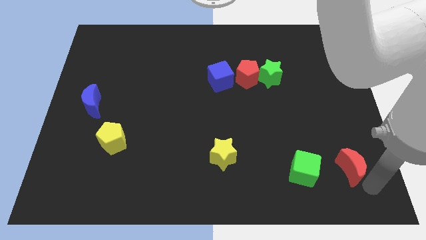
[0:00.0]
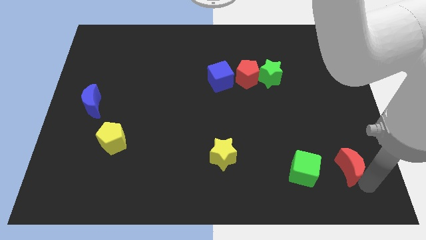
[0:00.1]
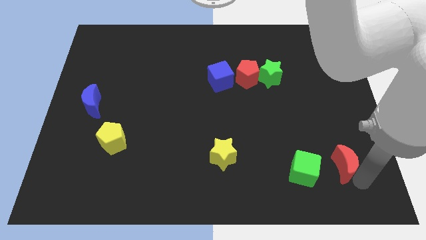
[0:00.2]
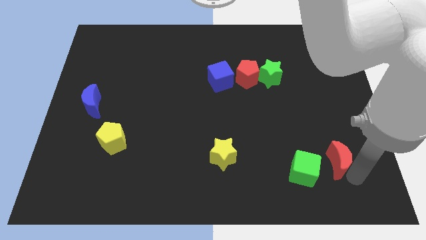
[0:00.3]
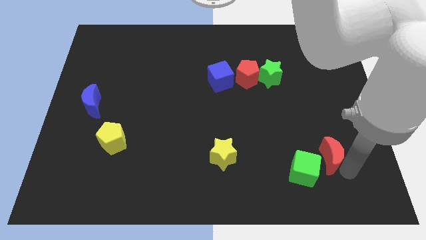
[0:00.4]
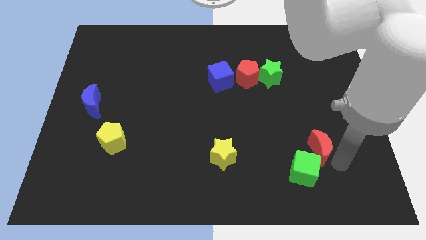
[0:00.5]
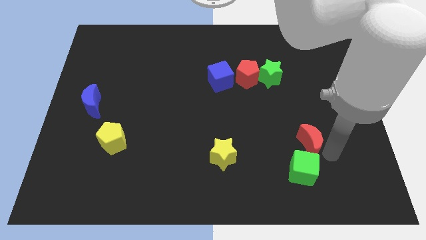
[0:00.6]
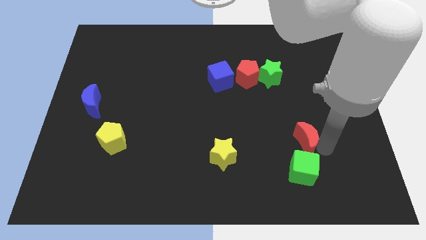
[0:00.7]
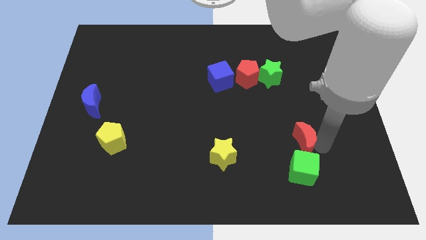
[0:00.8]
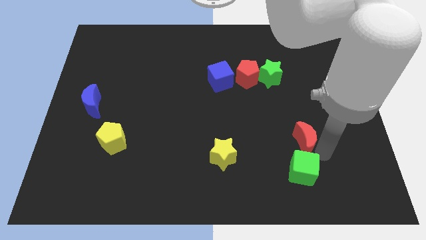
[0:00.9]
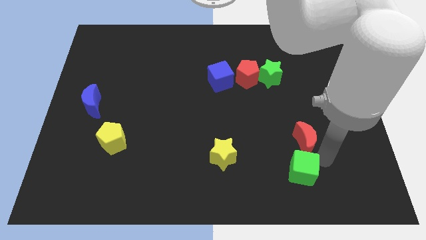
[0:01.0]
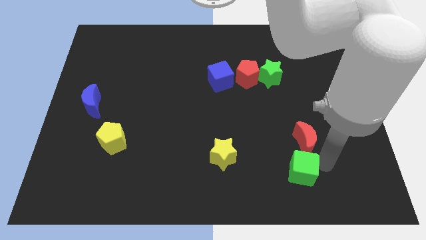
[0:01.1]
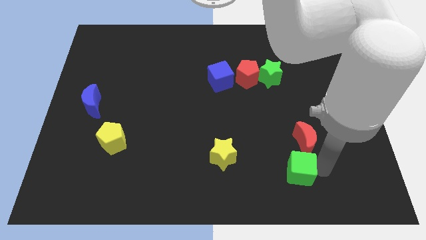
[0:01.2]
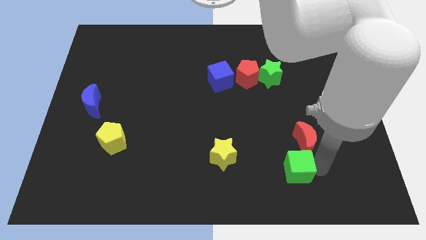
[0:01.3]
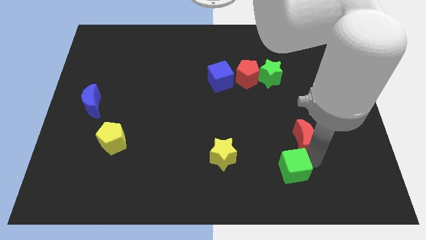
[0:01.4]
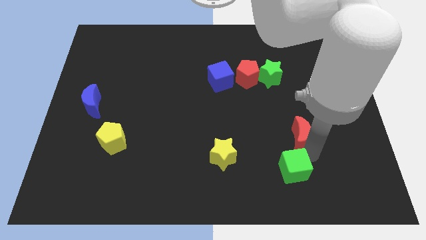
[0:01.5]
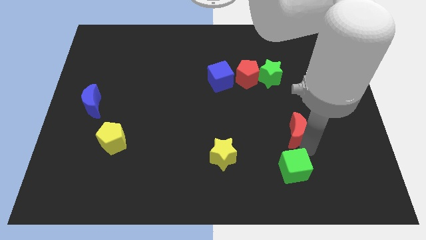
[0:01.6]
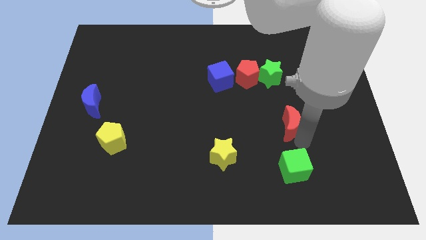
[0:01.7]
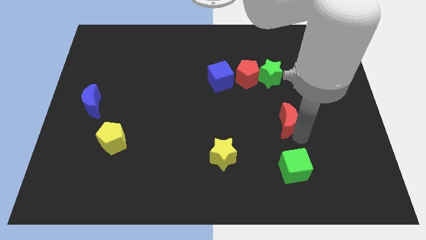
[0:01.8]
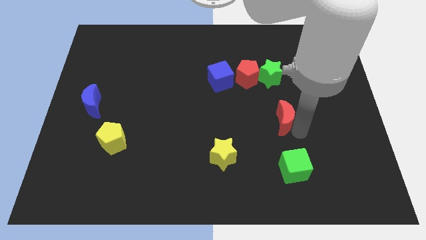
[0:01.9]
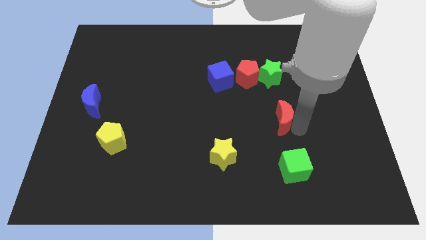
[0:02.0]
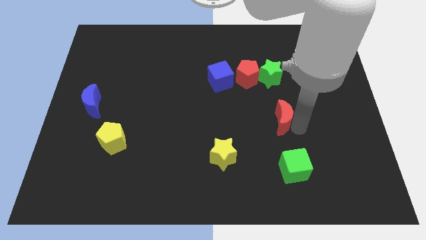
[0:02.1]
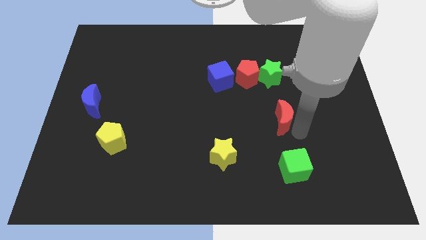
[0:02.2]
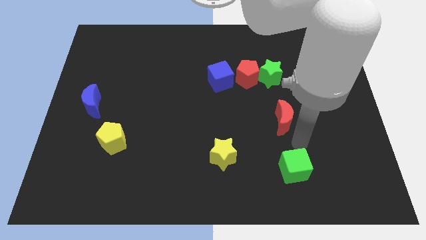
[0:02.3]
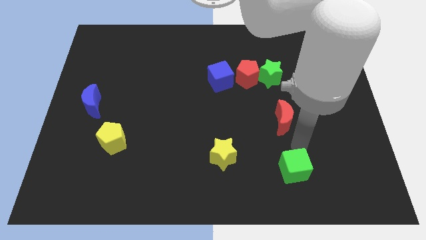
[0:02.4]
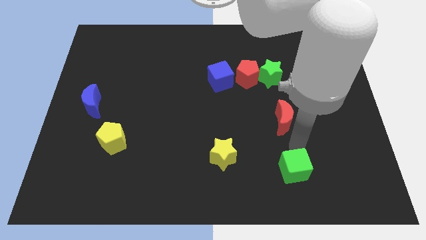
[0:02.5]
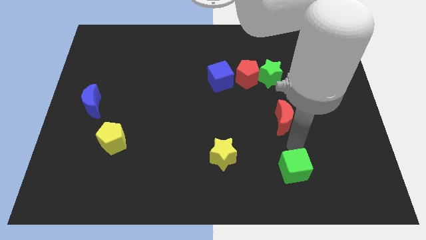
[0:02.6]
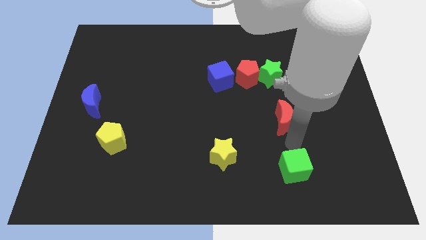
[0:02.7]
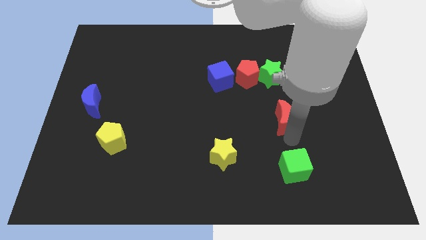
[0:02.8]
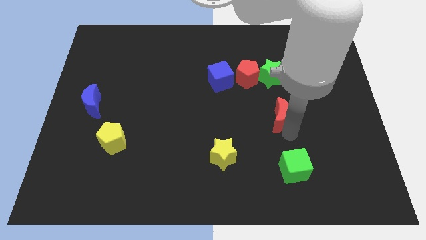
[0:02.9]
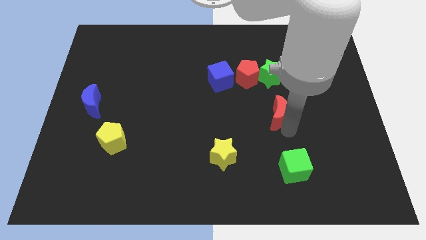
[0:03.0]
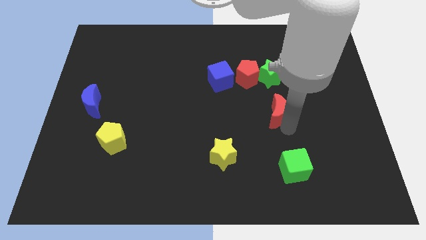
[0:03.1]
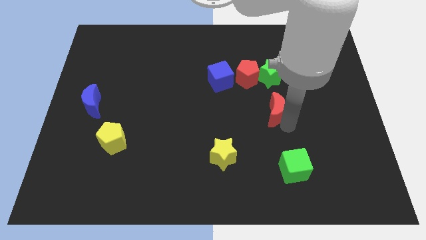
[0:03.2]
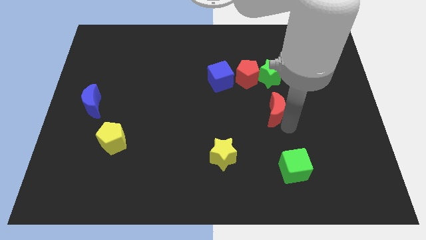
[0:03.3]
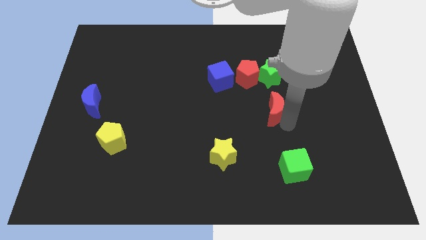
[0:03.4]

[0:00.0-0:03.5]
place the red moon diagonally in between both the green blocks

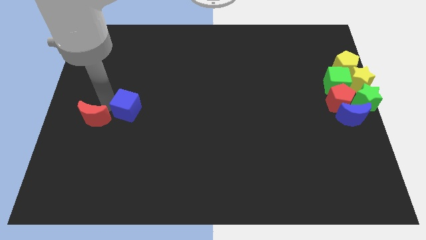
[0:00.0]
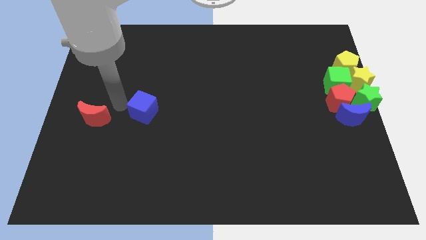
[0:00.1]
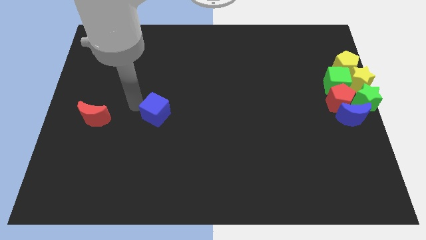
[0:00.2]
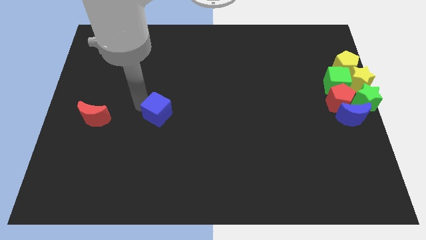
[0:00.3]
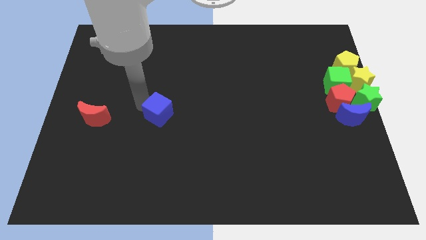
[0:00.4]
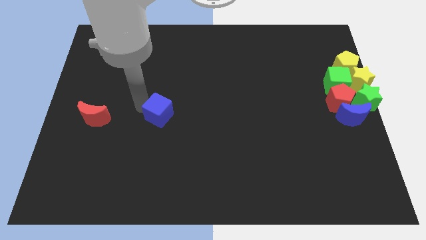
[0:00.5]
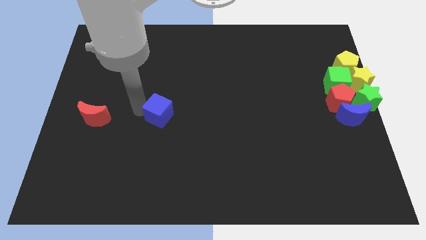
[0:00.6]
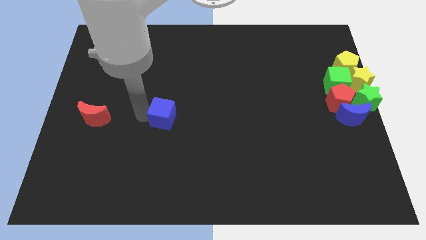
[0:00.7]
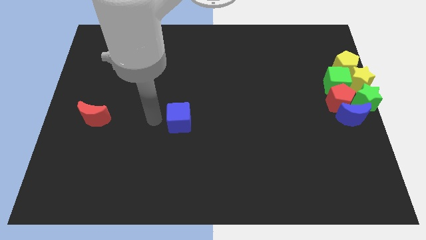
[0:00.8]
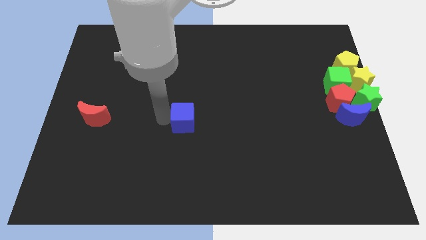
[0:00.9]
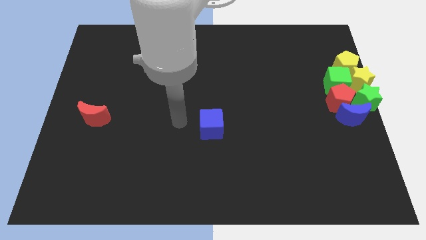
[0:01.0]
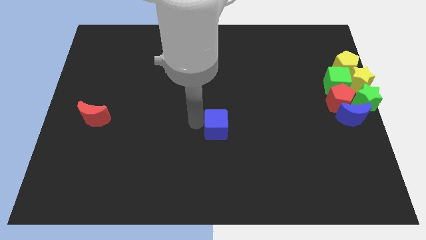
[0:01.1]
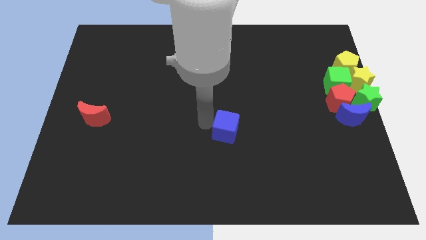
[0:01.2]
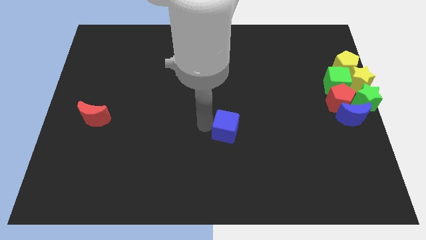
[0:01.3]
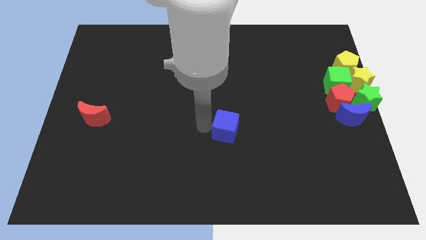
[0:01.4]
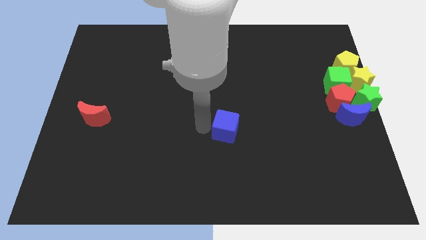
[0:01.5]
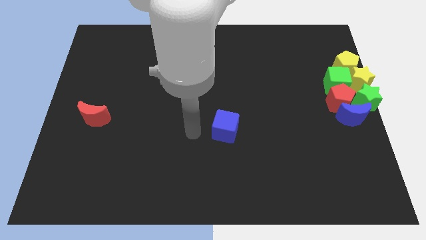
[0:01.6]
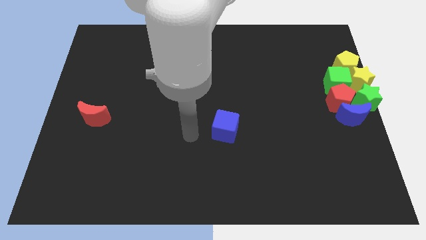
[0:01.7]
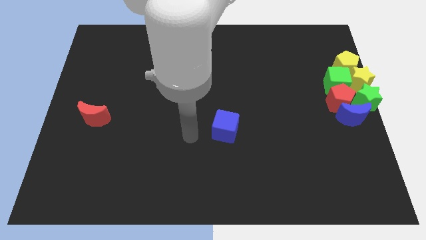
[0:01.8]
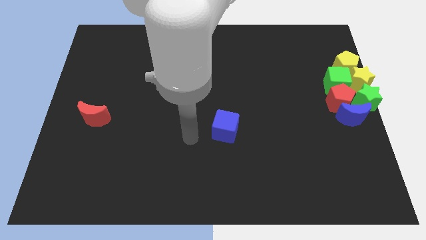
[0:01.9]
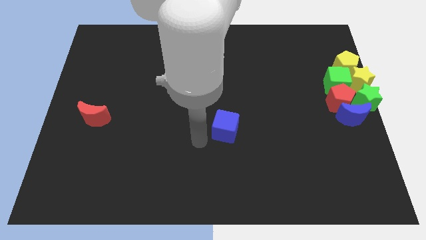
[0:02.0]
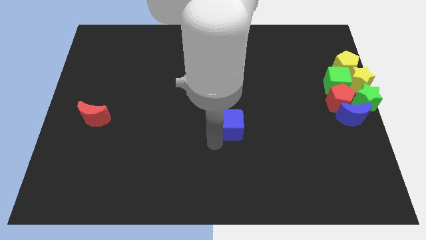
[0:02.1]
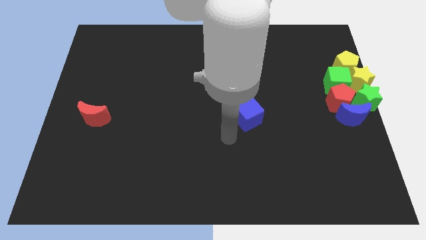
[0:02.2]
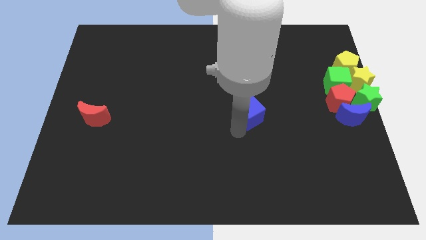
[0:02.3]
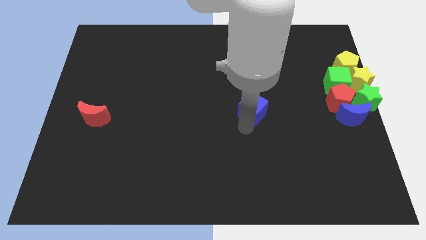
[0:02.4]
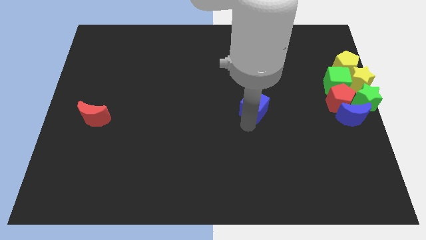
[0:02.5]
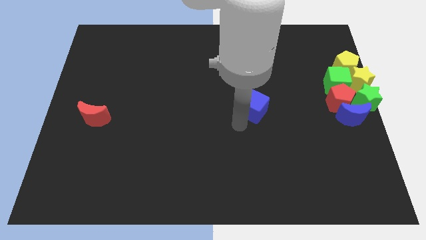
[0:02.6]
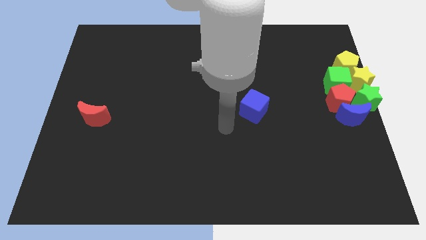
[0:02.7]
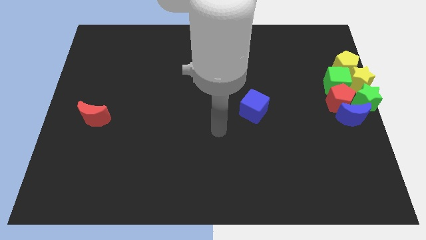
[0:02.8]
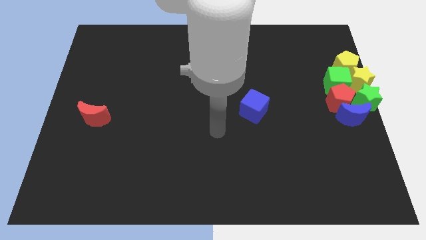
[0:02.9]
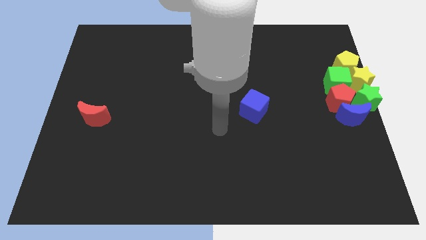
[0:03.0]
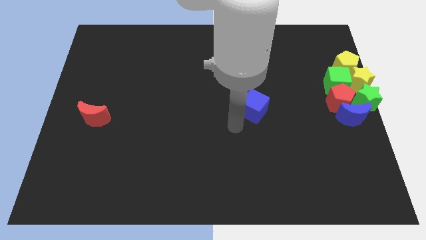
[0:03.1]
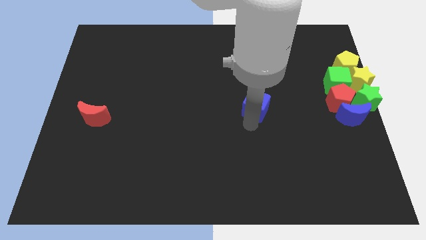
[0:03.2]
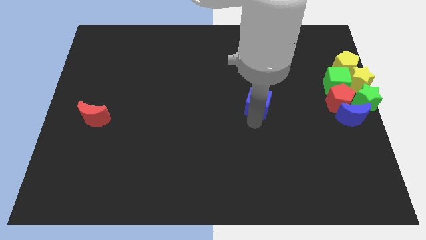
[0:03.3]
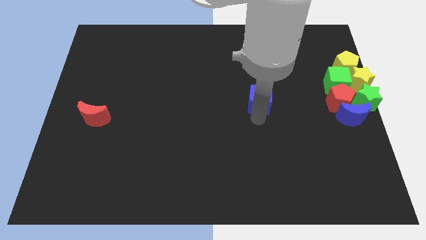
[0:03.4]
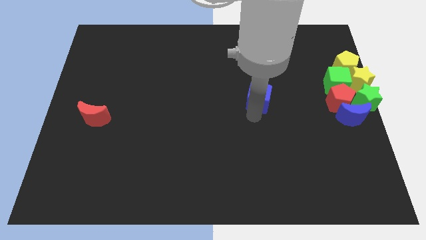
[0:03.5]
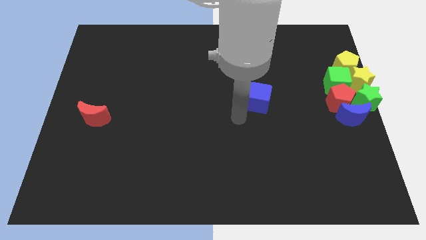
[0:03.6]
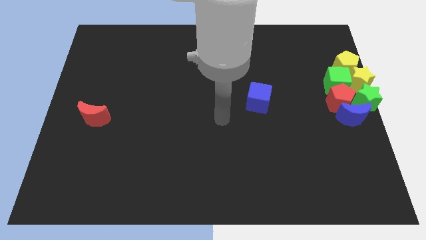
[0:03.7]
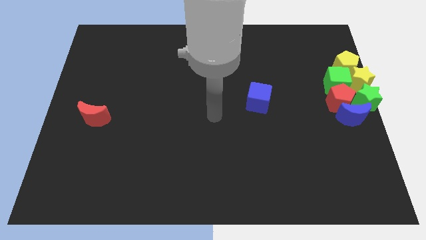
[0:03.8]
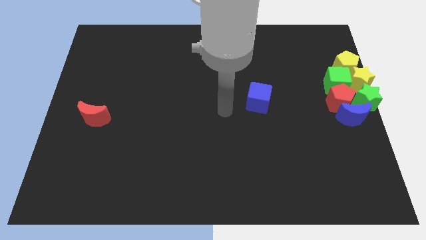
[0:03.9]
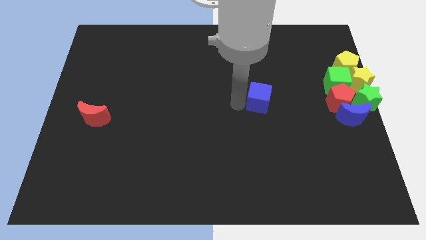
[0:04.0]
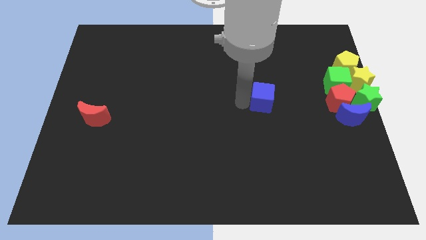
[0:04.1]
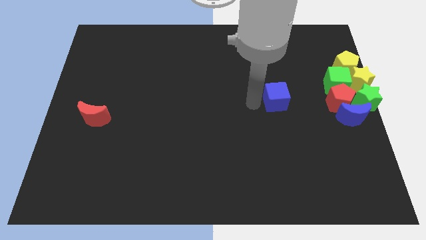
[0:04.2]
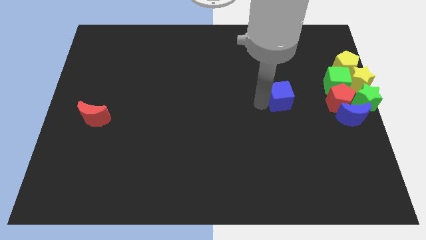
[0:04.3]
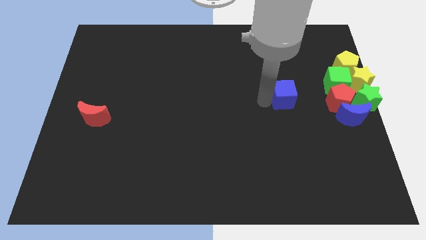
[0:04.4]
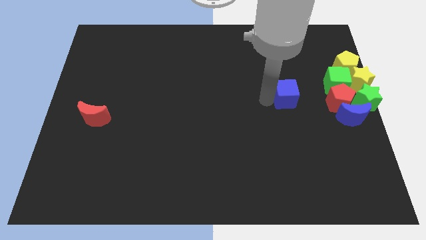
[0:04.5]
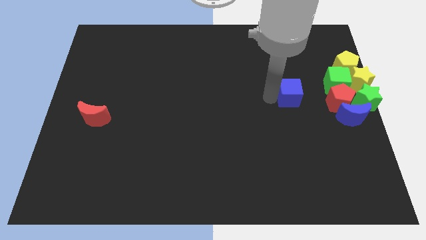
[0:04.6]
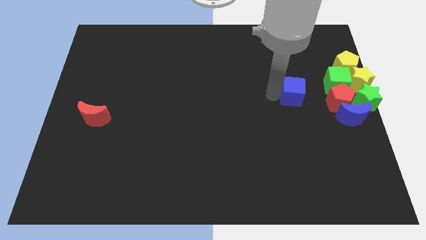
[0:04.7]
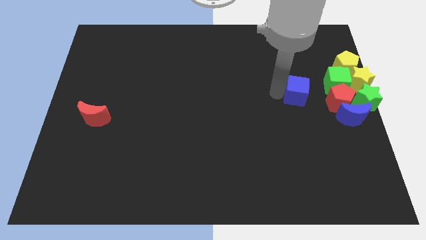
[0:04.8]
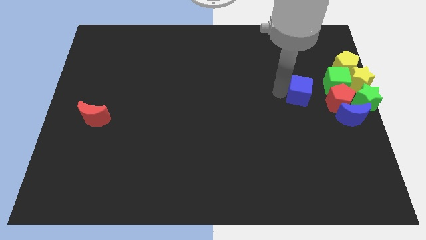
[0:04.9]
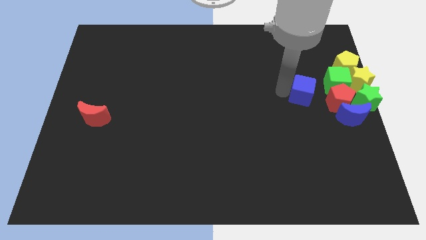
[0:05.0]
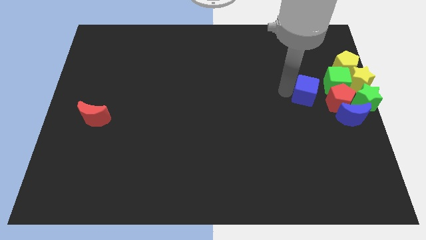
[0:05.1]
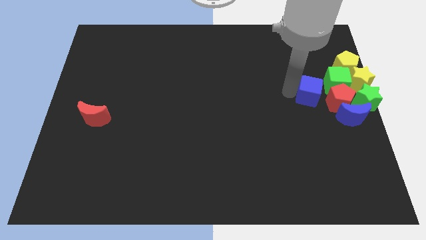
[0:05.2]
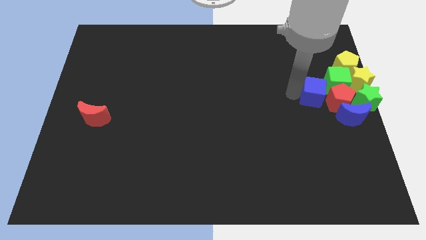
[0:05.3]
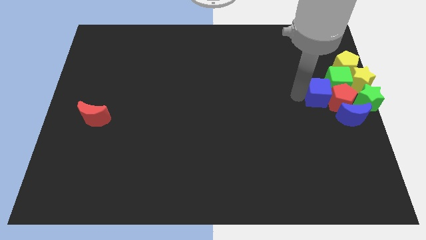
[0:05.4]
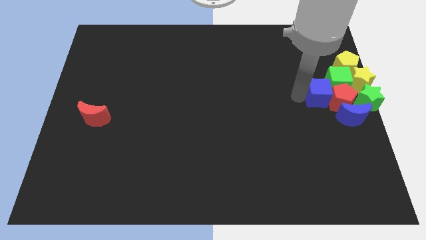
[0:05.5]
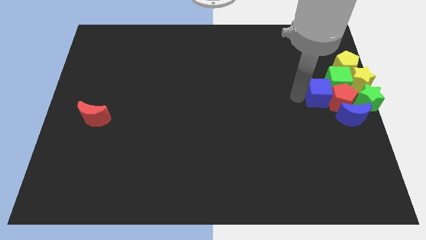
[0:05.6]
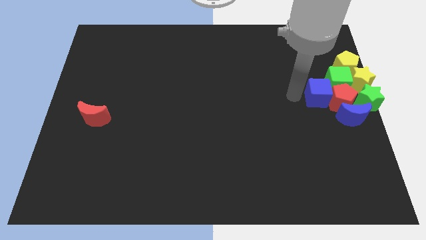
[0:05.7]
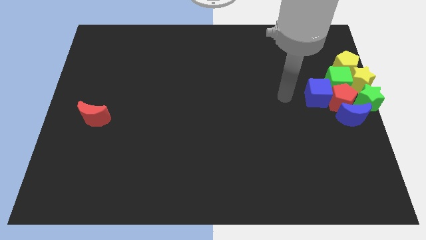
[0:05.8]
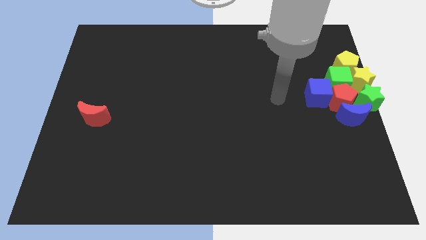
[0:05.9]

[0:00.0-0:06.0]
push the blue cube into the green cube and the red pentagon
